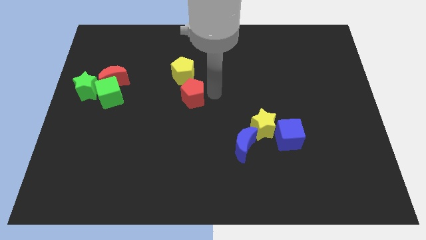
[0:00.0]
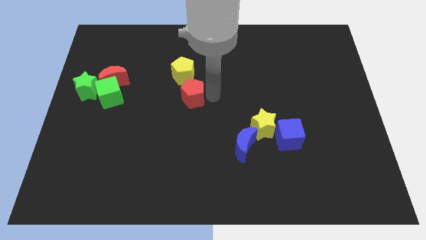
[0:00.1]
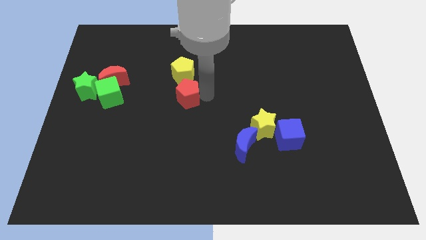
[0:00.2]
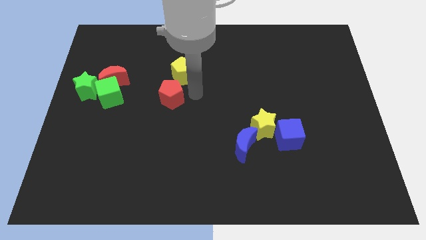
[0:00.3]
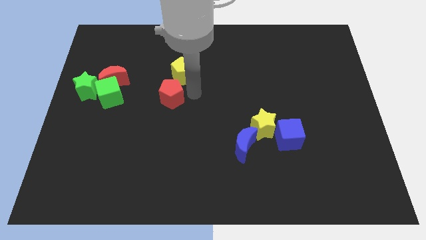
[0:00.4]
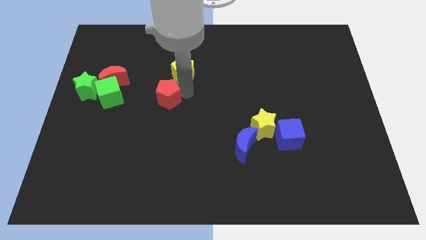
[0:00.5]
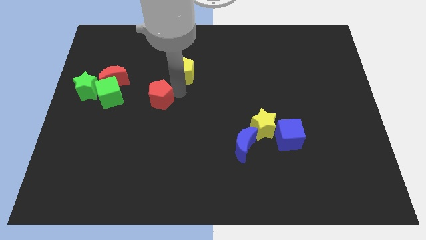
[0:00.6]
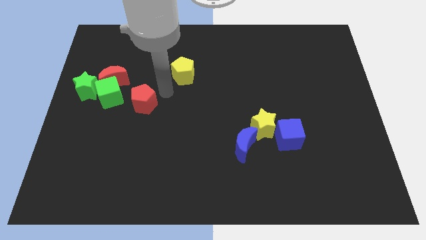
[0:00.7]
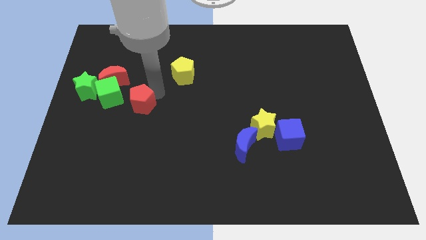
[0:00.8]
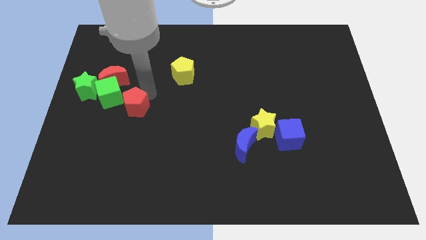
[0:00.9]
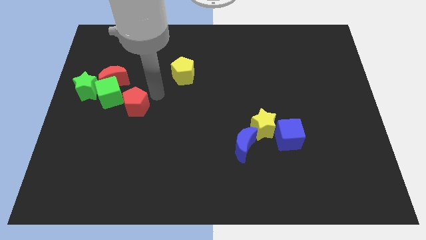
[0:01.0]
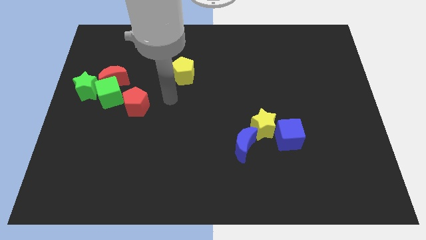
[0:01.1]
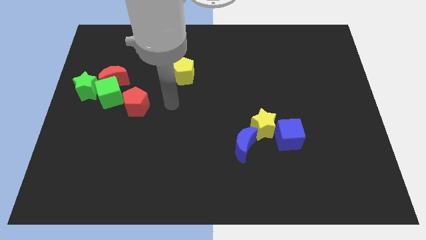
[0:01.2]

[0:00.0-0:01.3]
put the red pentagon at the bottom right of the green cube

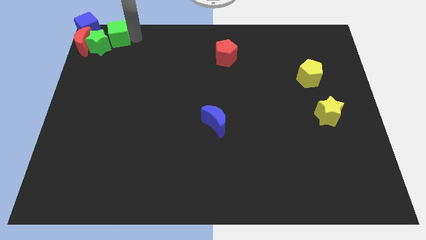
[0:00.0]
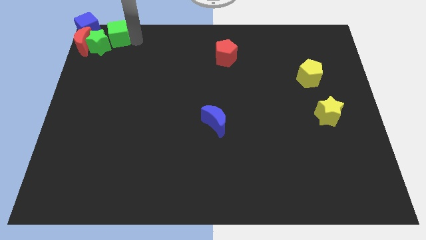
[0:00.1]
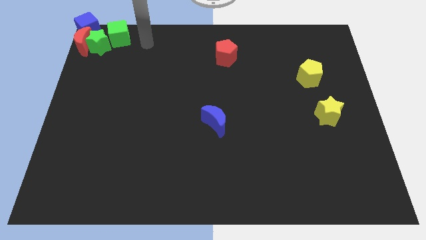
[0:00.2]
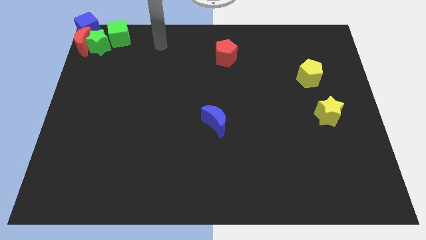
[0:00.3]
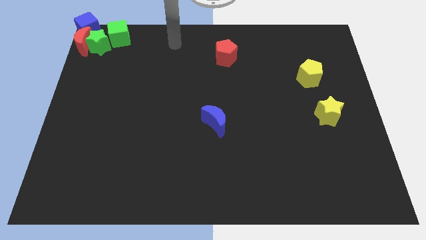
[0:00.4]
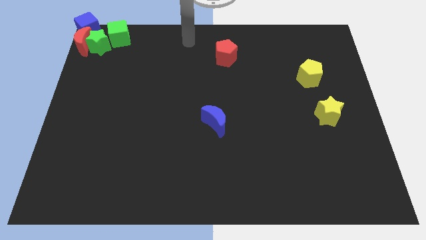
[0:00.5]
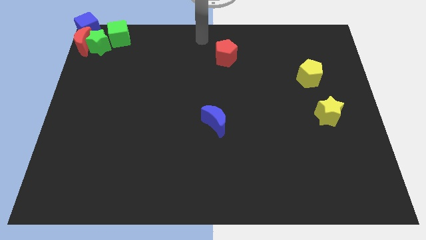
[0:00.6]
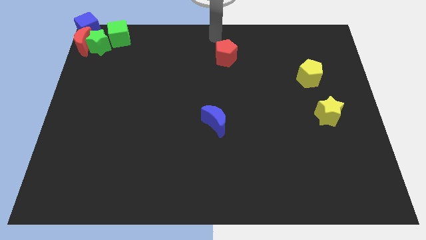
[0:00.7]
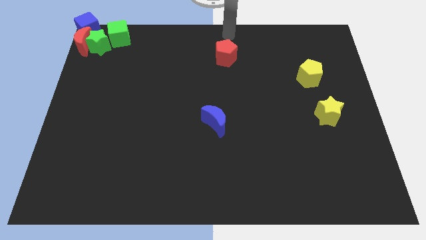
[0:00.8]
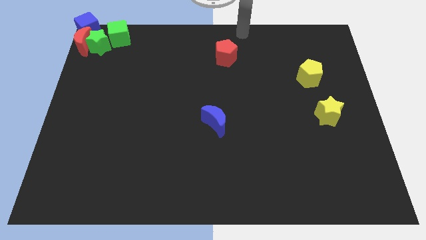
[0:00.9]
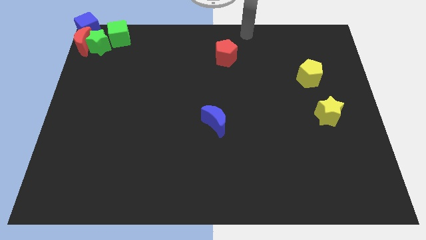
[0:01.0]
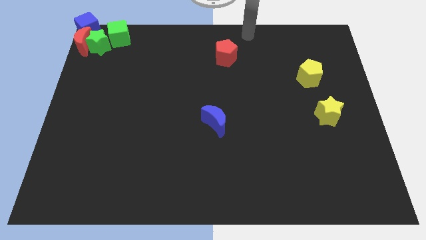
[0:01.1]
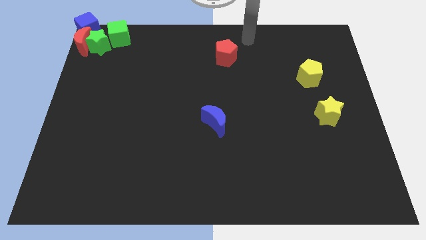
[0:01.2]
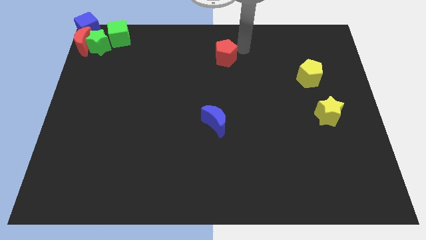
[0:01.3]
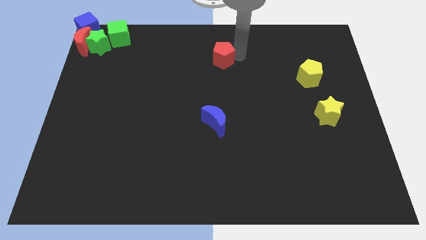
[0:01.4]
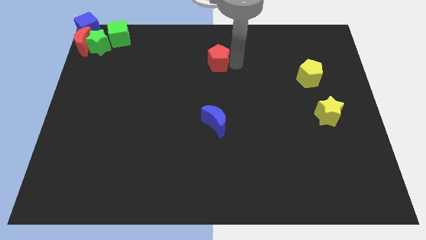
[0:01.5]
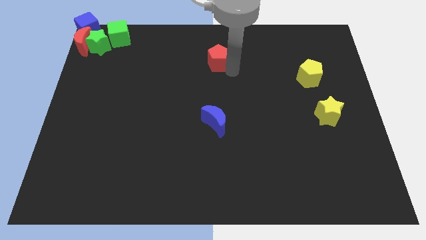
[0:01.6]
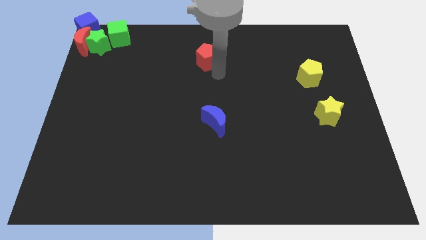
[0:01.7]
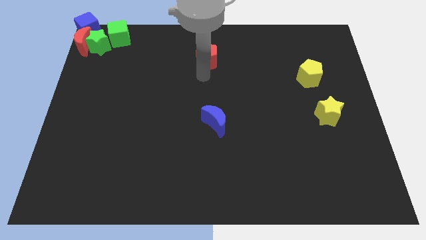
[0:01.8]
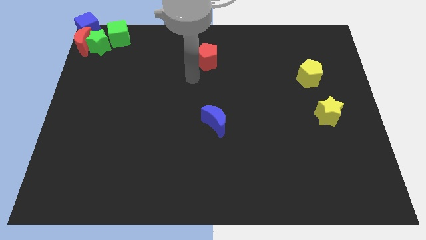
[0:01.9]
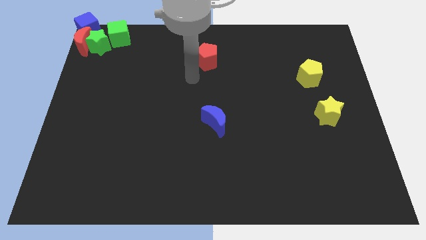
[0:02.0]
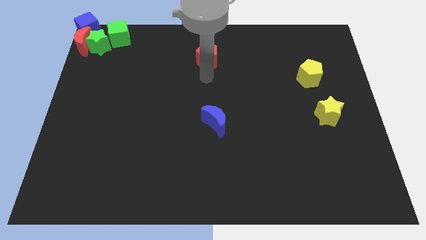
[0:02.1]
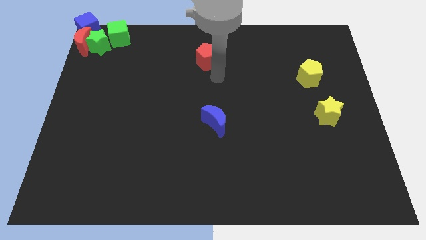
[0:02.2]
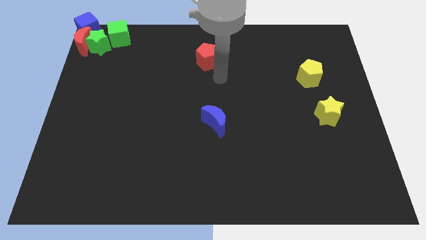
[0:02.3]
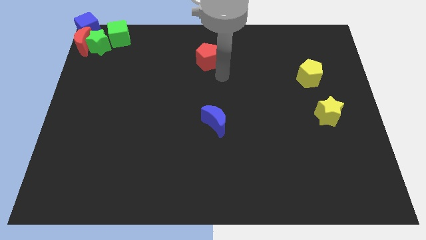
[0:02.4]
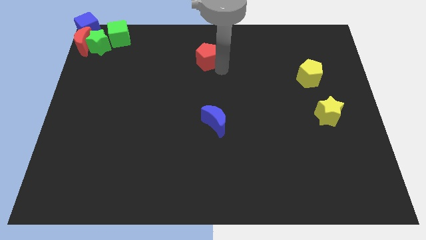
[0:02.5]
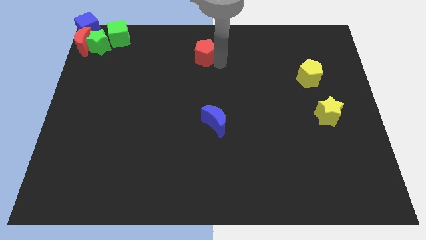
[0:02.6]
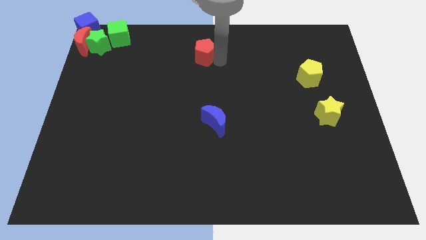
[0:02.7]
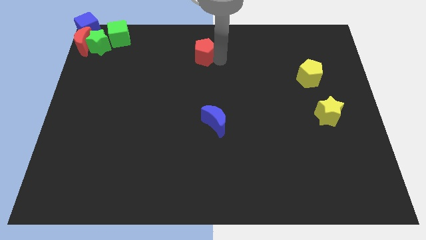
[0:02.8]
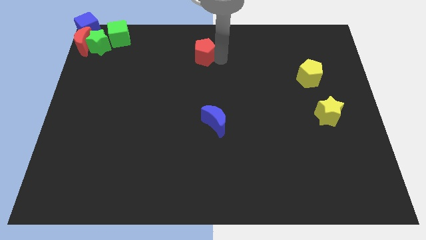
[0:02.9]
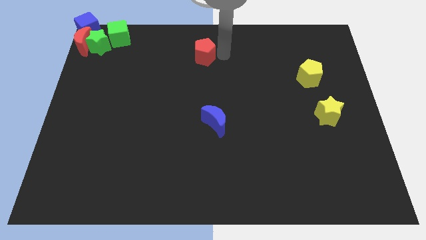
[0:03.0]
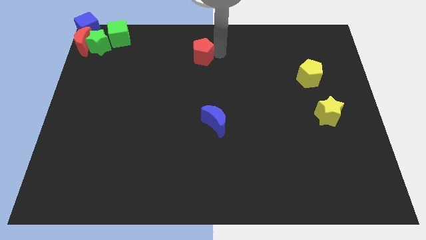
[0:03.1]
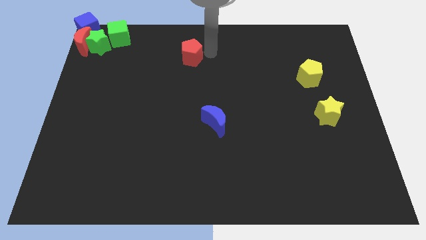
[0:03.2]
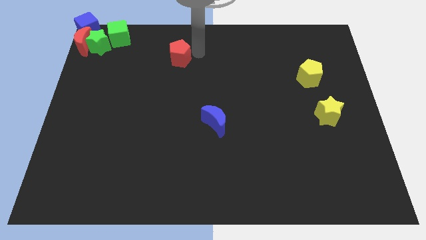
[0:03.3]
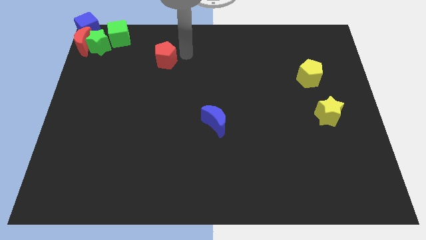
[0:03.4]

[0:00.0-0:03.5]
move the red pentagon to the left side of the table

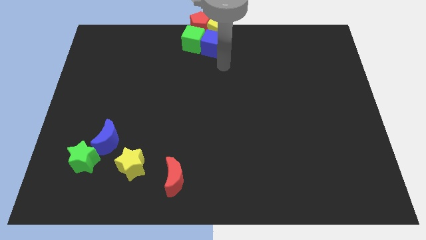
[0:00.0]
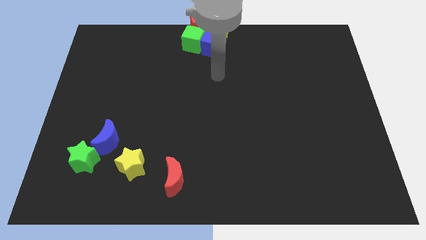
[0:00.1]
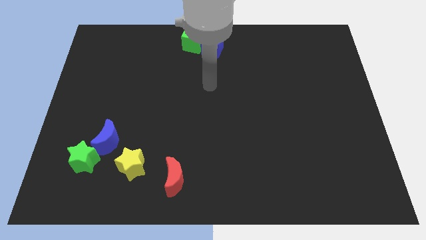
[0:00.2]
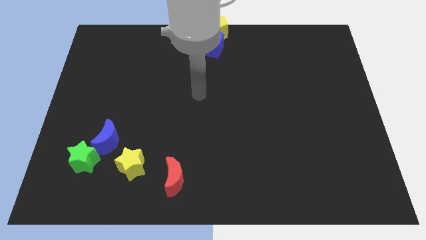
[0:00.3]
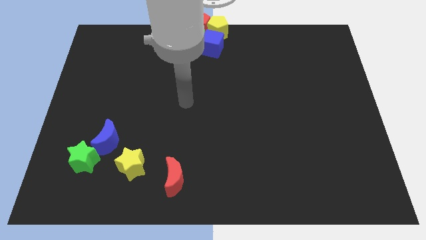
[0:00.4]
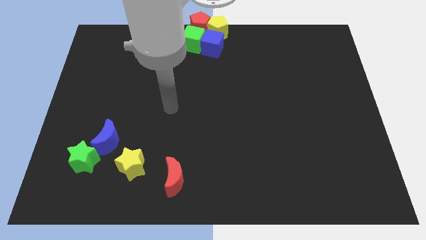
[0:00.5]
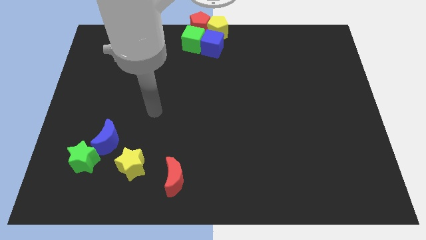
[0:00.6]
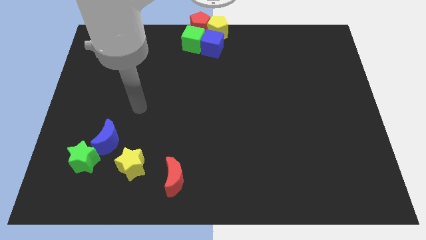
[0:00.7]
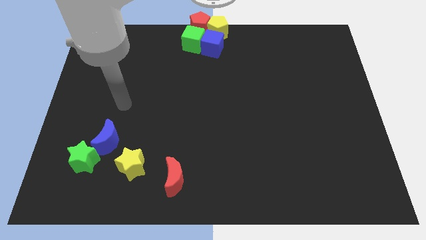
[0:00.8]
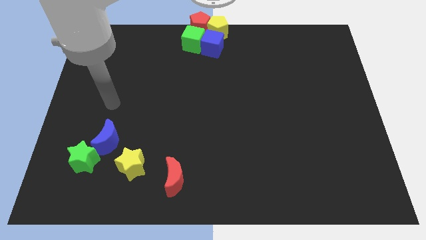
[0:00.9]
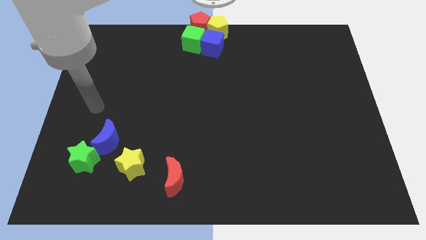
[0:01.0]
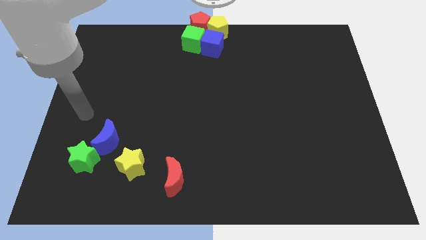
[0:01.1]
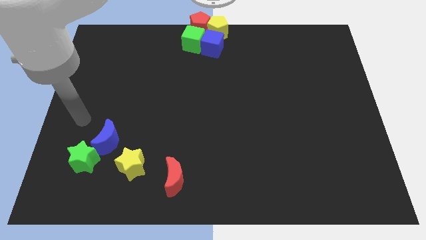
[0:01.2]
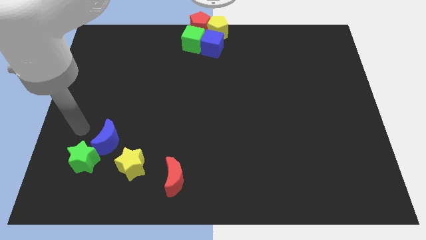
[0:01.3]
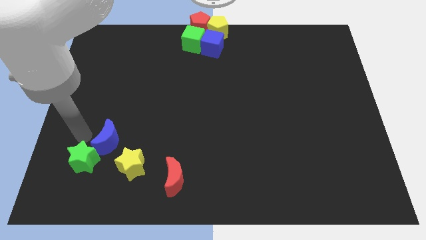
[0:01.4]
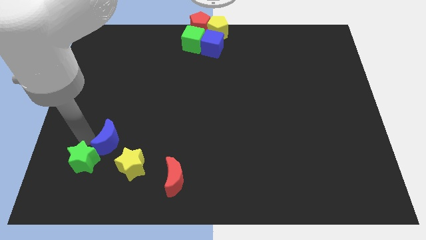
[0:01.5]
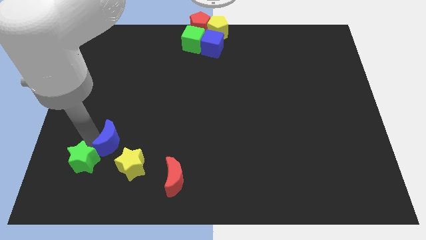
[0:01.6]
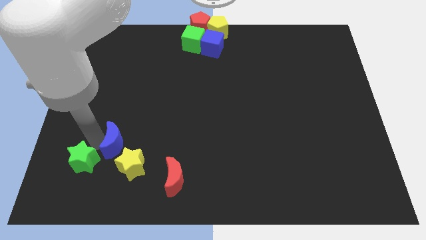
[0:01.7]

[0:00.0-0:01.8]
move your arm at the bottom left side of the blue moon

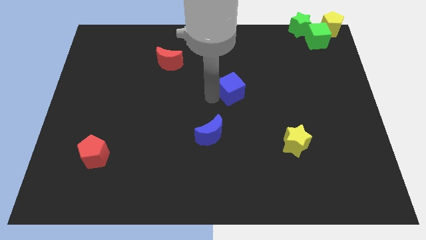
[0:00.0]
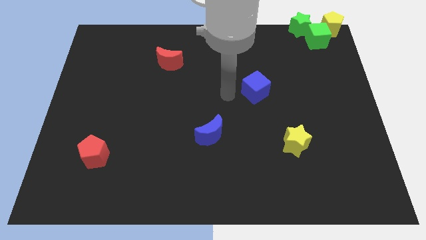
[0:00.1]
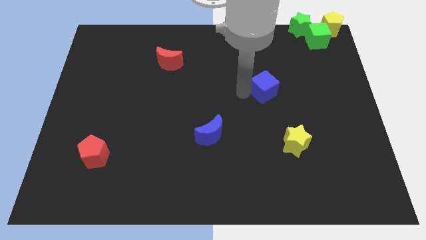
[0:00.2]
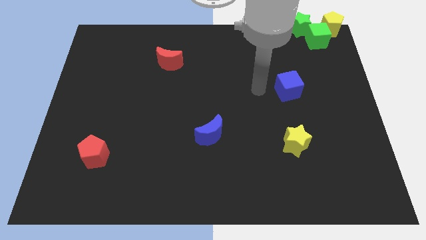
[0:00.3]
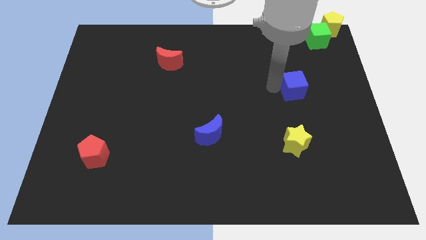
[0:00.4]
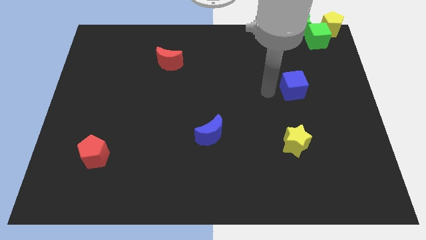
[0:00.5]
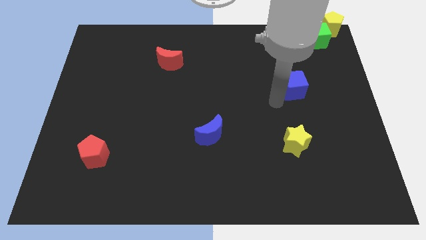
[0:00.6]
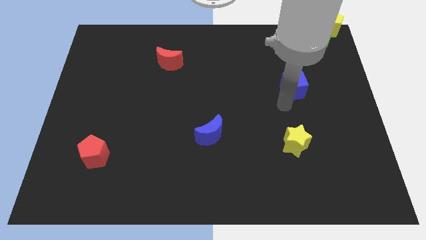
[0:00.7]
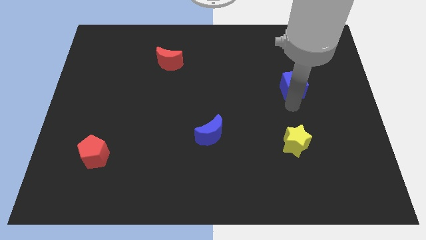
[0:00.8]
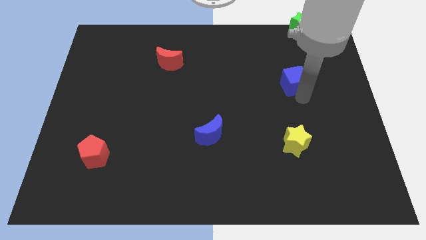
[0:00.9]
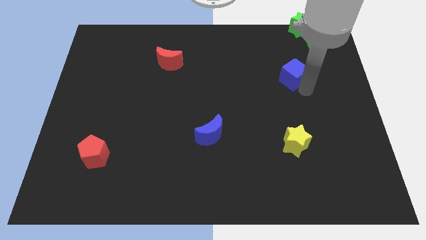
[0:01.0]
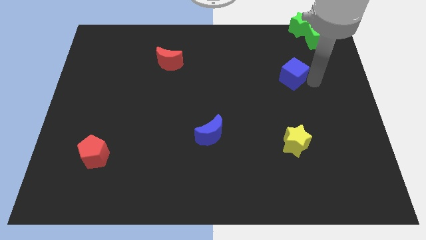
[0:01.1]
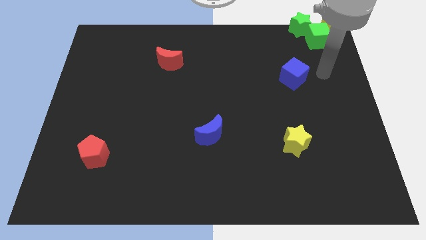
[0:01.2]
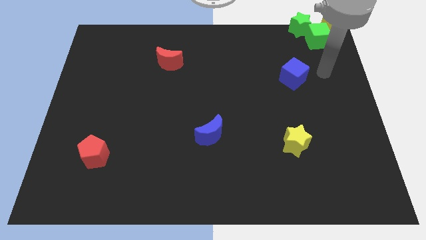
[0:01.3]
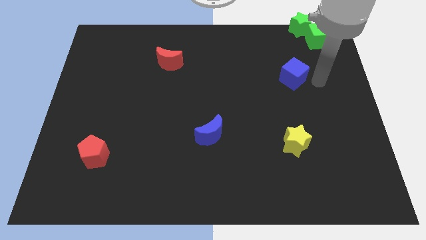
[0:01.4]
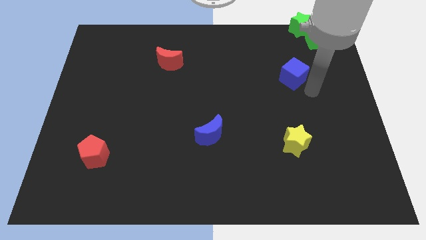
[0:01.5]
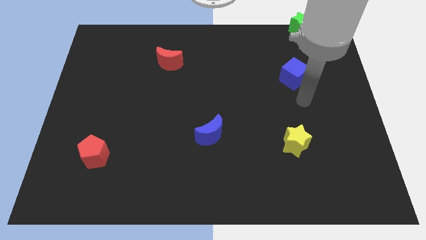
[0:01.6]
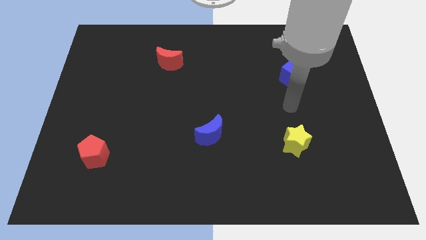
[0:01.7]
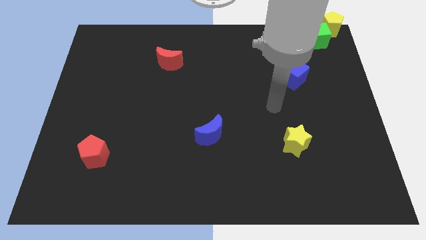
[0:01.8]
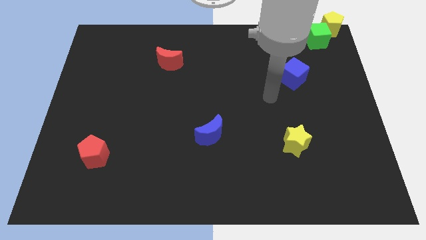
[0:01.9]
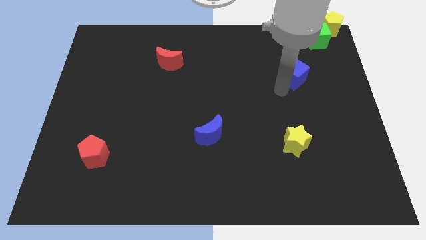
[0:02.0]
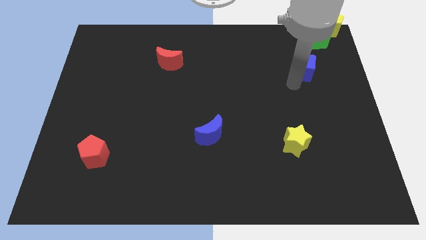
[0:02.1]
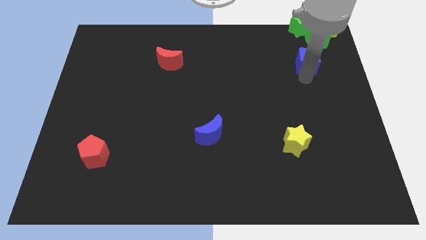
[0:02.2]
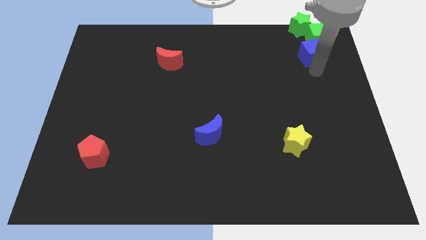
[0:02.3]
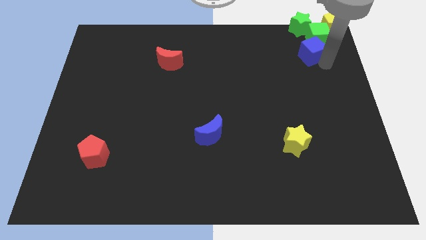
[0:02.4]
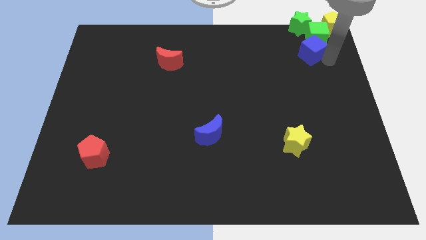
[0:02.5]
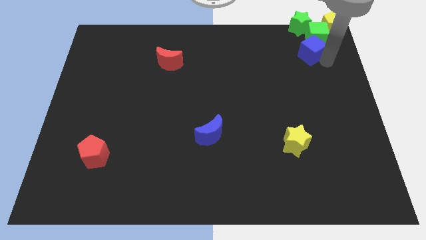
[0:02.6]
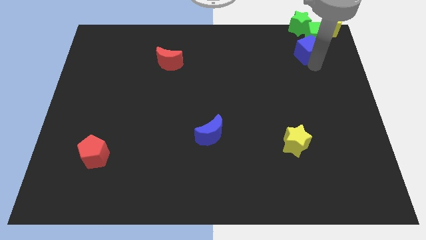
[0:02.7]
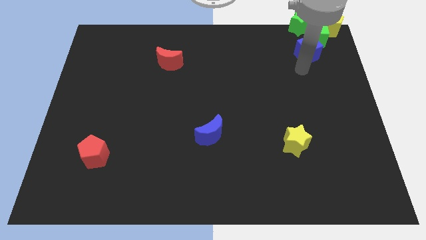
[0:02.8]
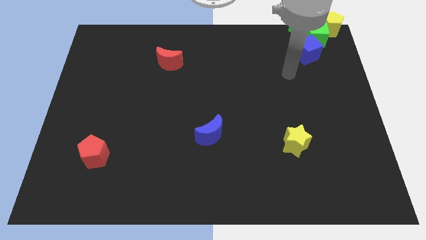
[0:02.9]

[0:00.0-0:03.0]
move the blue cube towards top right corner
